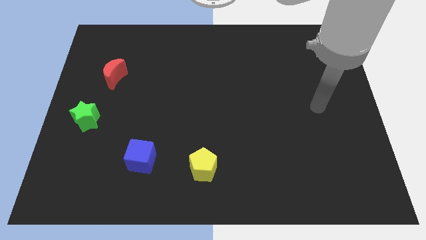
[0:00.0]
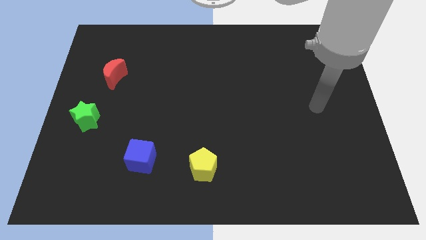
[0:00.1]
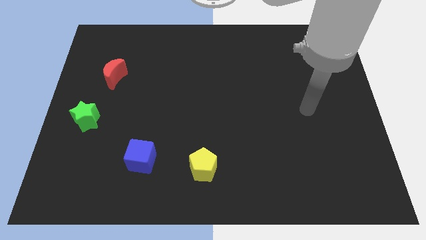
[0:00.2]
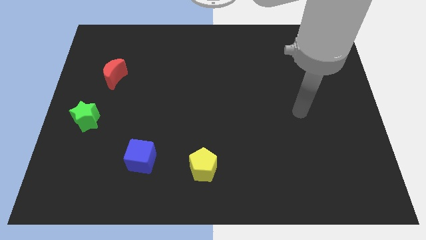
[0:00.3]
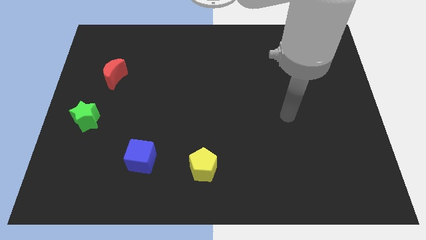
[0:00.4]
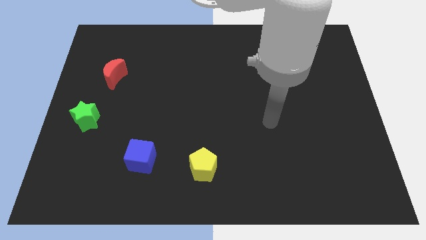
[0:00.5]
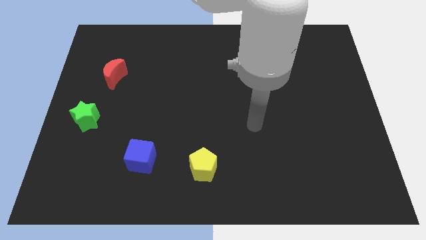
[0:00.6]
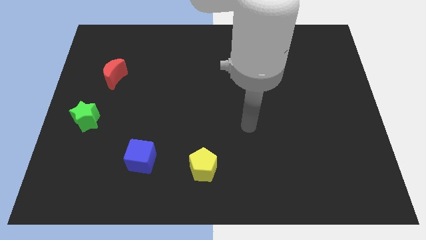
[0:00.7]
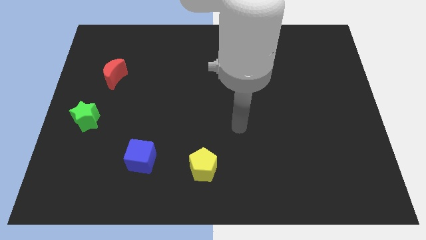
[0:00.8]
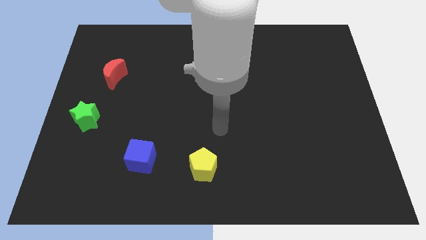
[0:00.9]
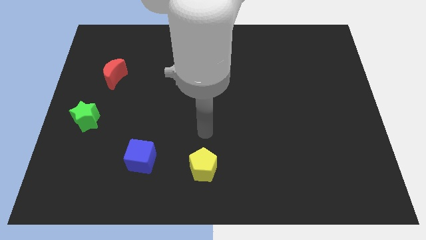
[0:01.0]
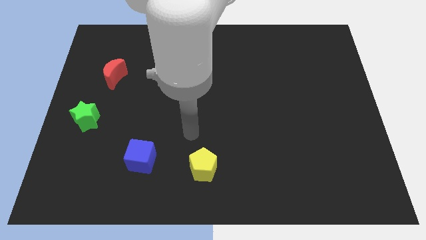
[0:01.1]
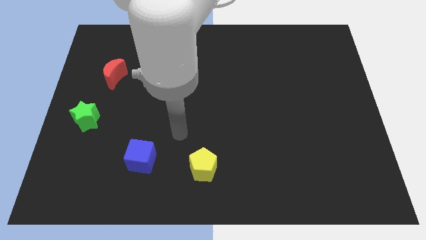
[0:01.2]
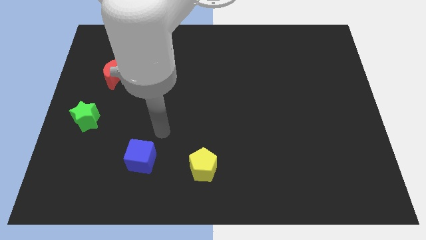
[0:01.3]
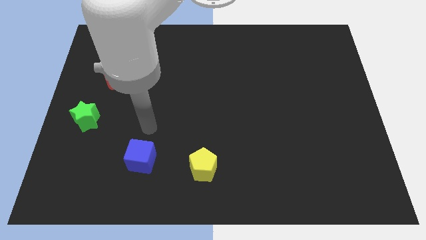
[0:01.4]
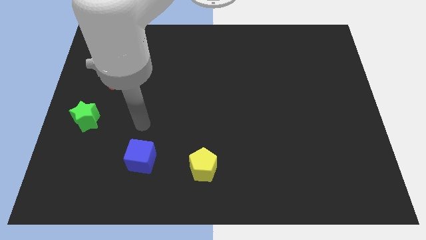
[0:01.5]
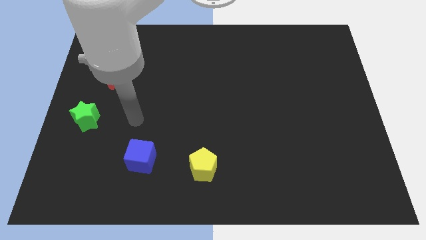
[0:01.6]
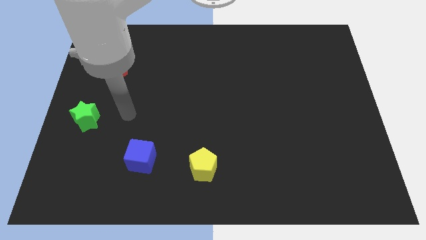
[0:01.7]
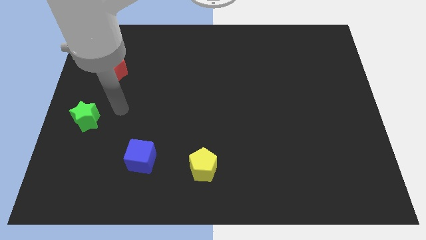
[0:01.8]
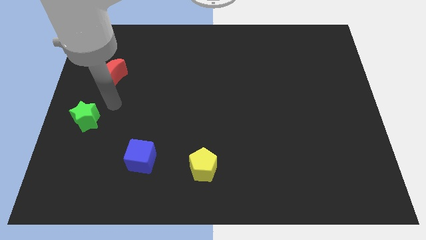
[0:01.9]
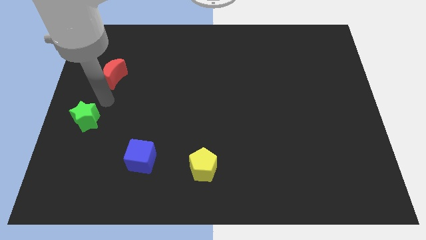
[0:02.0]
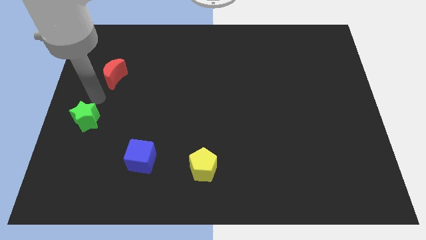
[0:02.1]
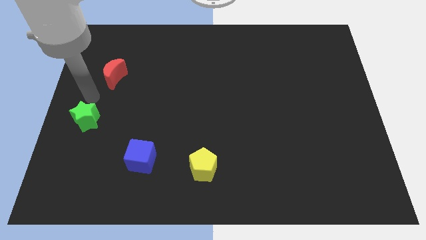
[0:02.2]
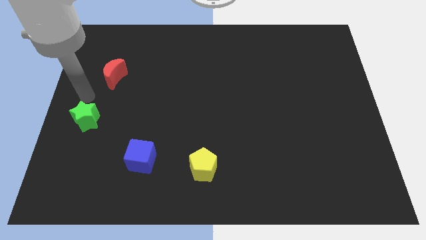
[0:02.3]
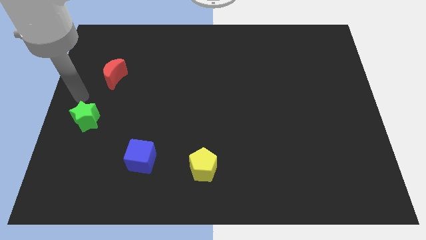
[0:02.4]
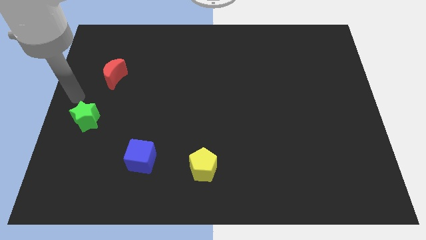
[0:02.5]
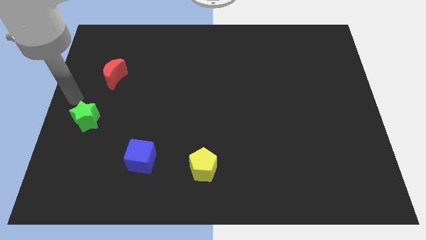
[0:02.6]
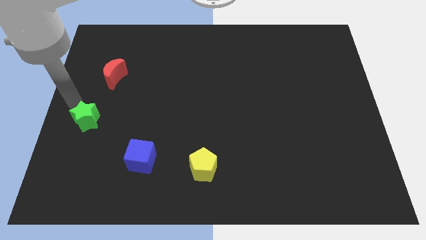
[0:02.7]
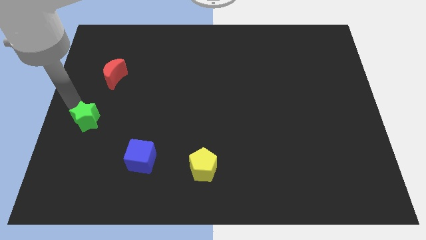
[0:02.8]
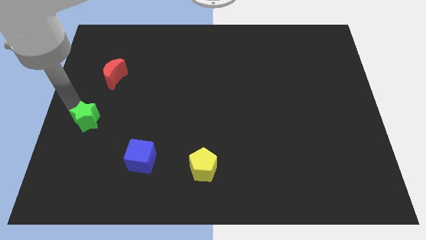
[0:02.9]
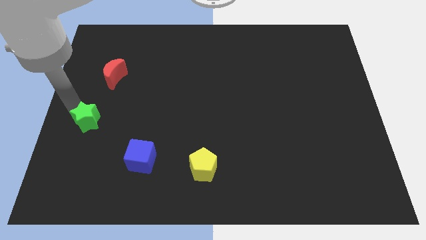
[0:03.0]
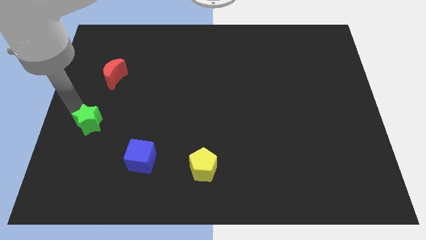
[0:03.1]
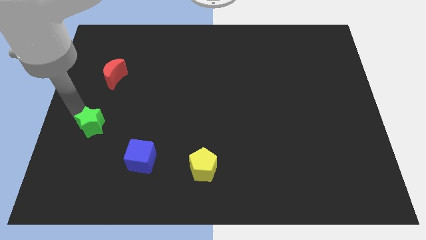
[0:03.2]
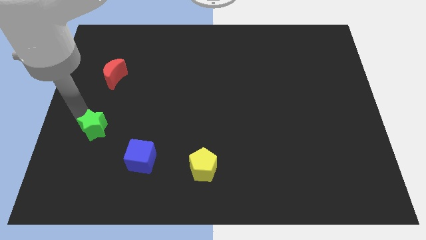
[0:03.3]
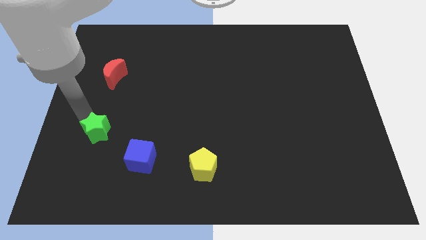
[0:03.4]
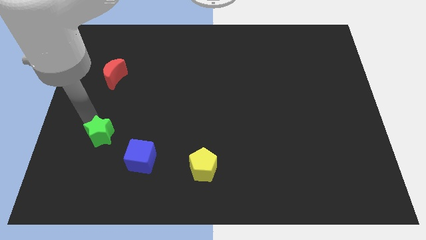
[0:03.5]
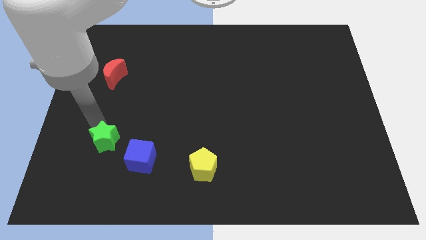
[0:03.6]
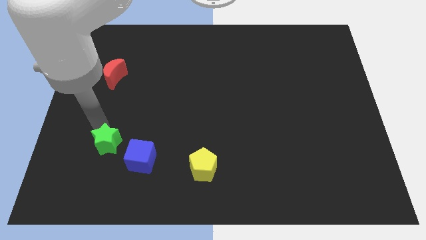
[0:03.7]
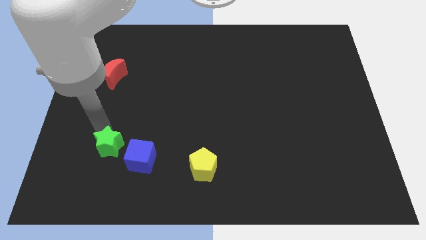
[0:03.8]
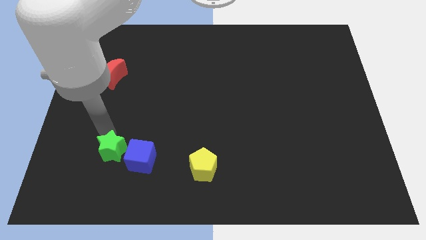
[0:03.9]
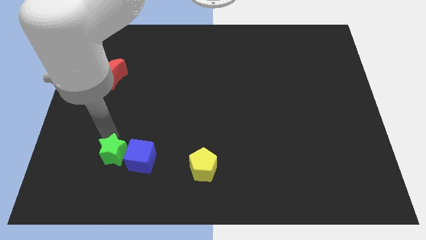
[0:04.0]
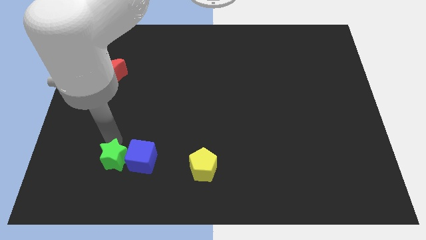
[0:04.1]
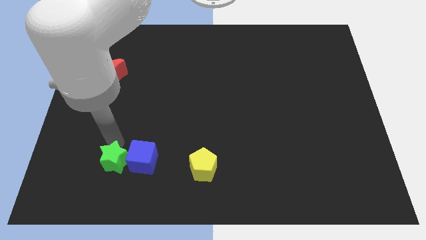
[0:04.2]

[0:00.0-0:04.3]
slide the star to the blue block

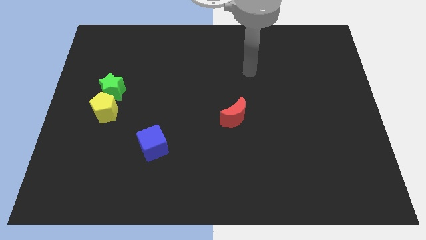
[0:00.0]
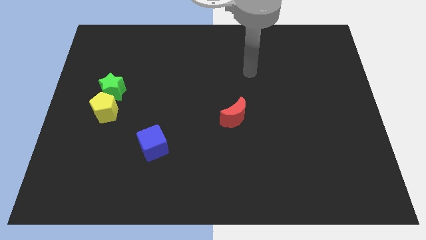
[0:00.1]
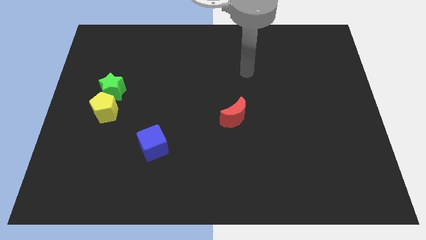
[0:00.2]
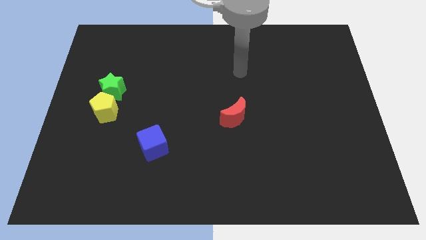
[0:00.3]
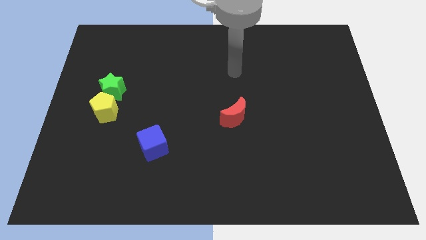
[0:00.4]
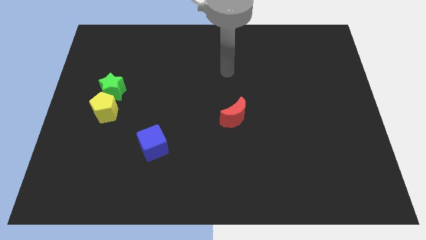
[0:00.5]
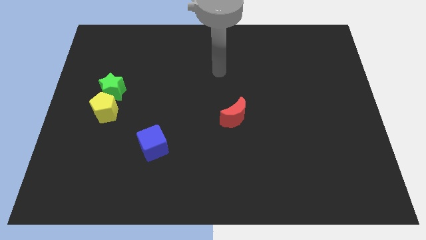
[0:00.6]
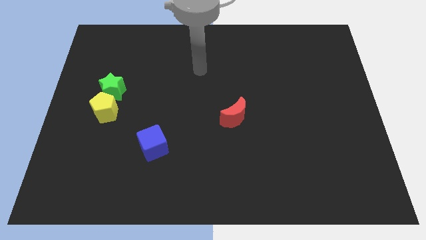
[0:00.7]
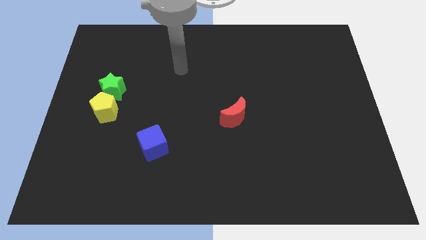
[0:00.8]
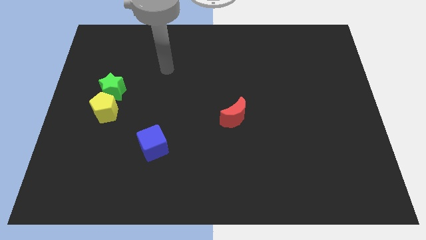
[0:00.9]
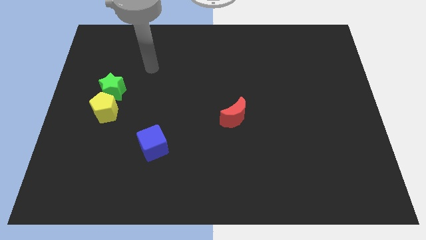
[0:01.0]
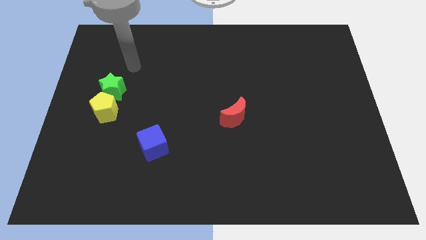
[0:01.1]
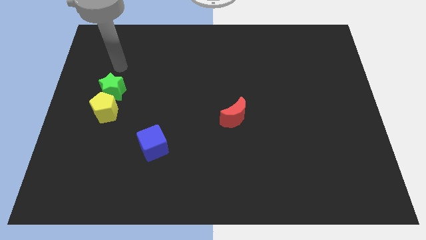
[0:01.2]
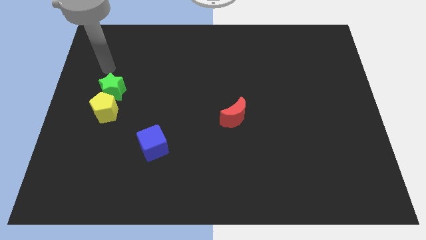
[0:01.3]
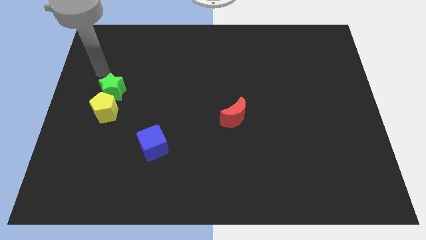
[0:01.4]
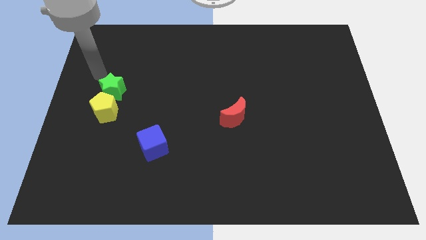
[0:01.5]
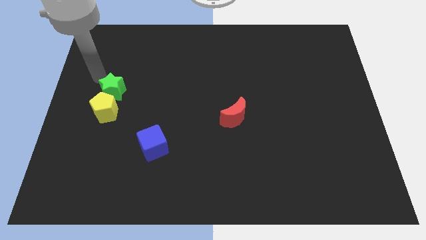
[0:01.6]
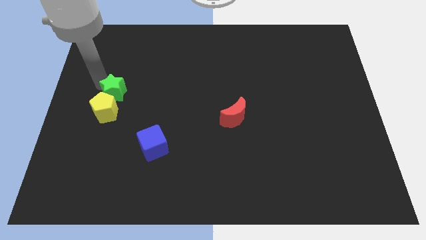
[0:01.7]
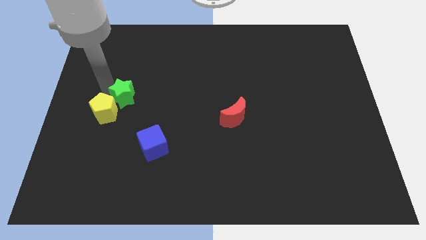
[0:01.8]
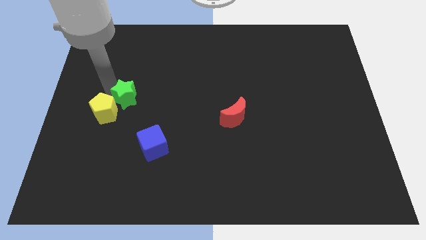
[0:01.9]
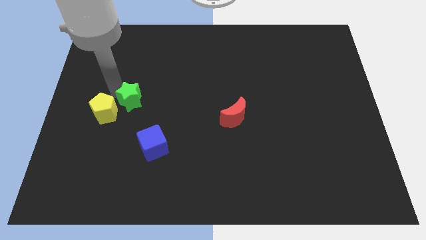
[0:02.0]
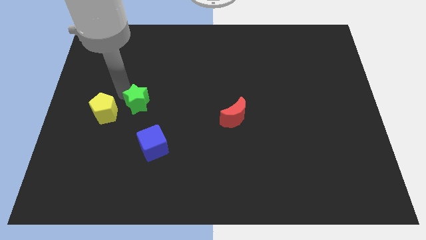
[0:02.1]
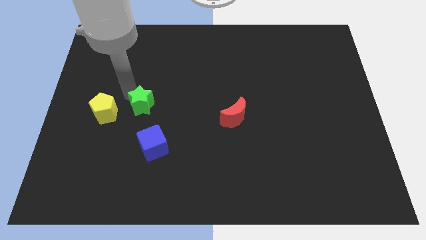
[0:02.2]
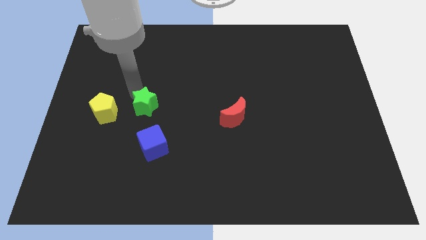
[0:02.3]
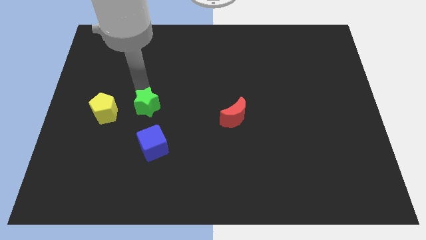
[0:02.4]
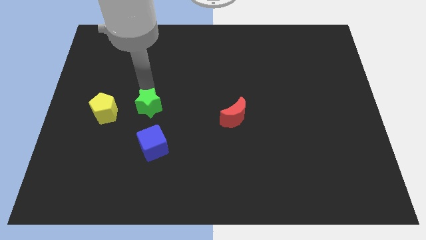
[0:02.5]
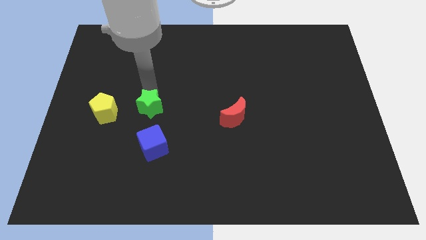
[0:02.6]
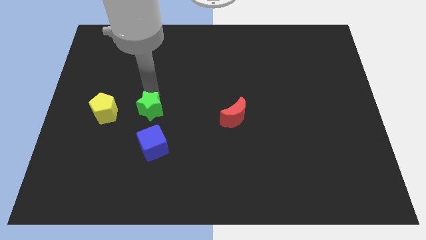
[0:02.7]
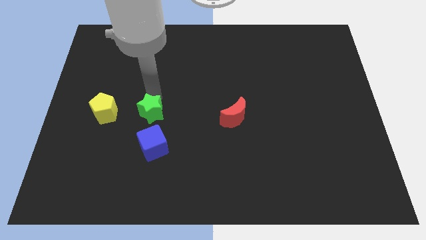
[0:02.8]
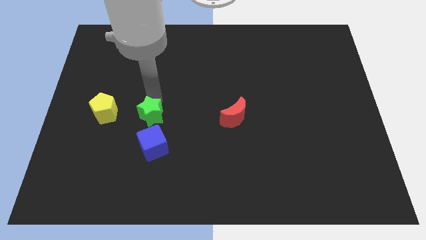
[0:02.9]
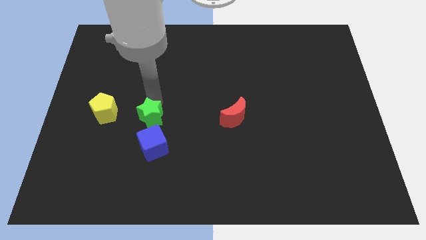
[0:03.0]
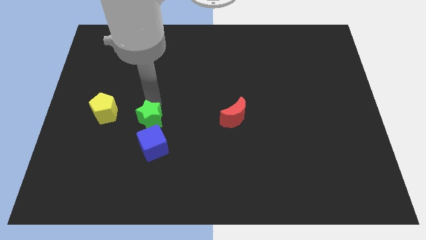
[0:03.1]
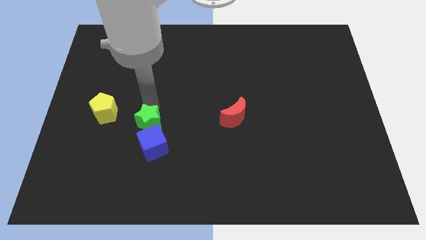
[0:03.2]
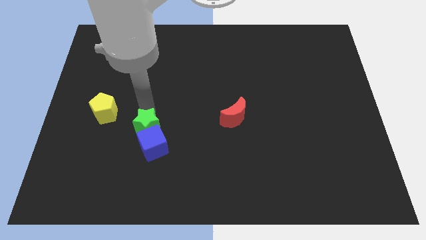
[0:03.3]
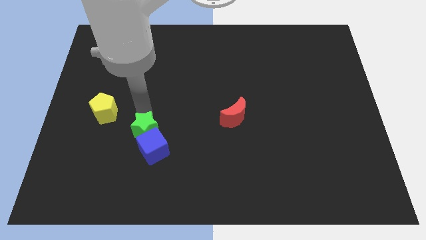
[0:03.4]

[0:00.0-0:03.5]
slide the green block towards the cube

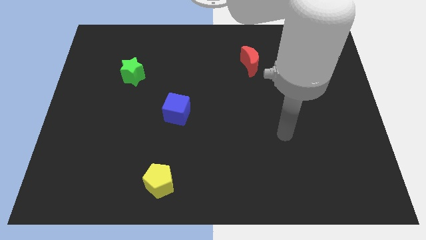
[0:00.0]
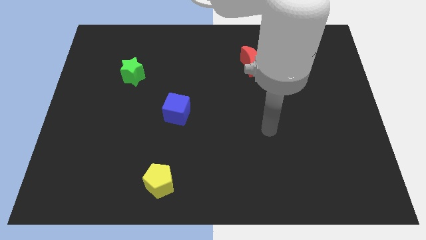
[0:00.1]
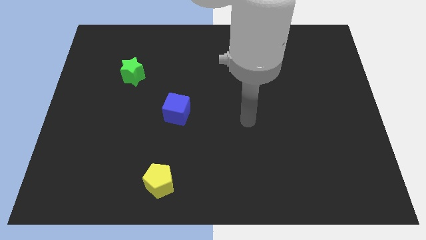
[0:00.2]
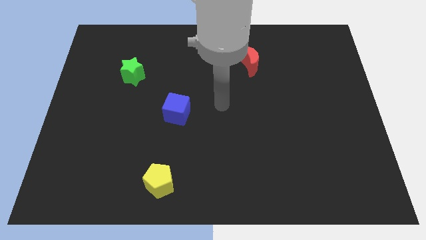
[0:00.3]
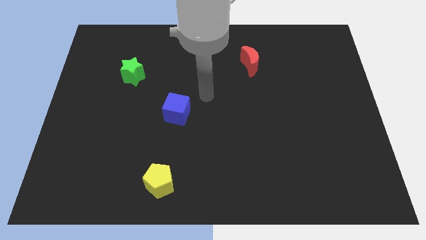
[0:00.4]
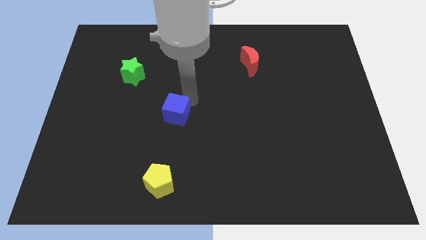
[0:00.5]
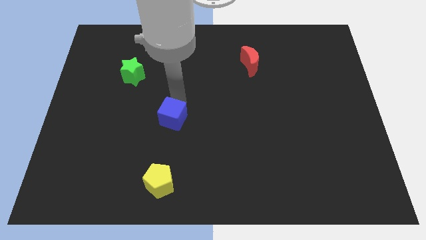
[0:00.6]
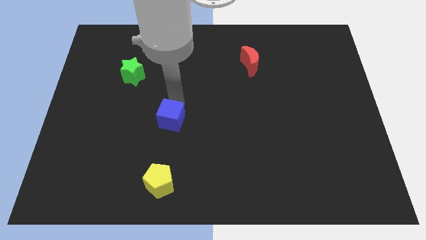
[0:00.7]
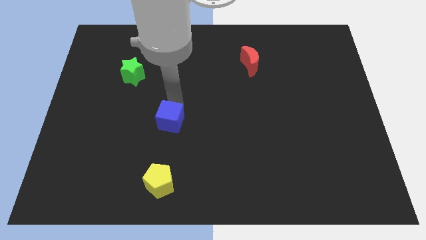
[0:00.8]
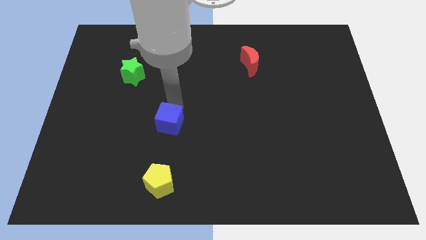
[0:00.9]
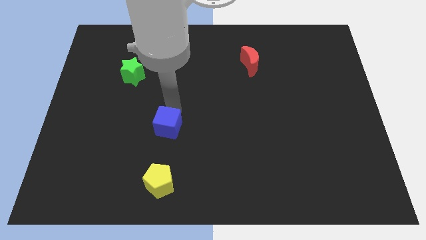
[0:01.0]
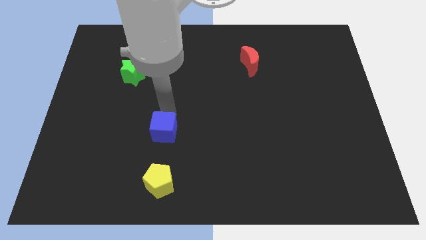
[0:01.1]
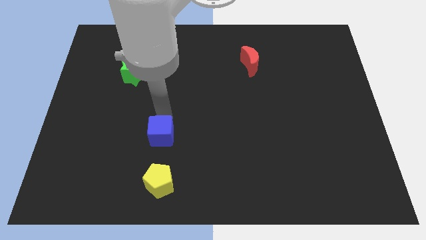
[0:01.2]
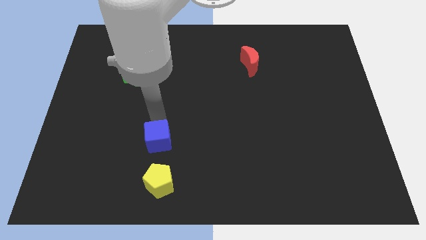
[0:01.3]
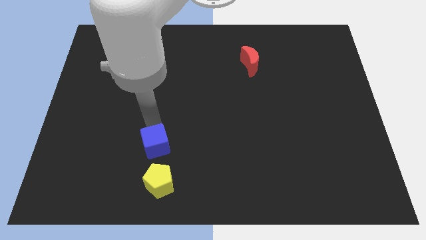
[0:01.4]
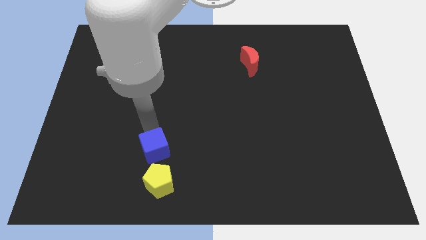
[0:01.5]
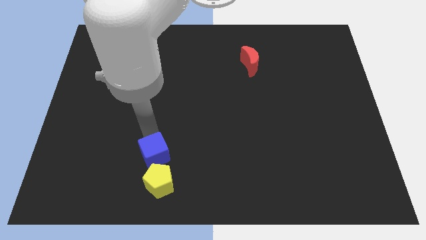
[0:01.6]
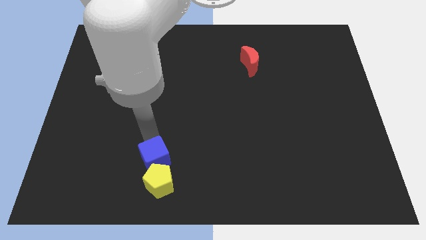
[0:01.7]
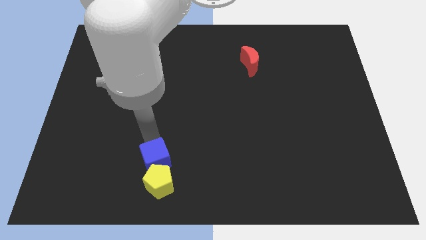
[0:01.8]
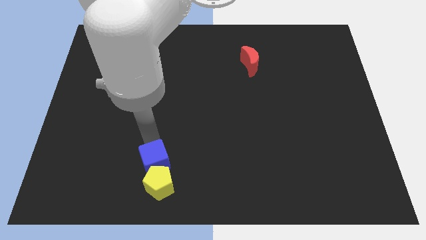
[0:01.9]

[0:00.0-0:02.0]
slide the cube close to the pentagon
